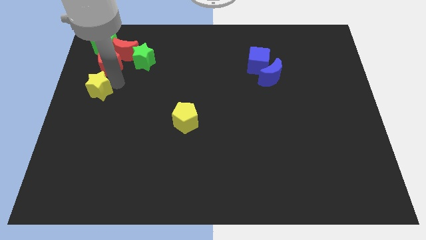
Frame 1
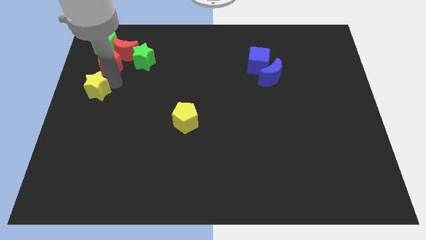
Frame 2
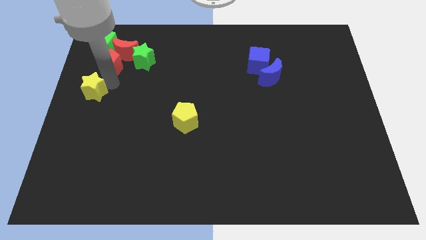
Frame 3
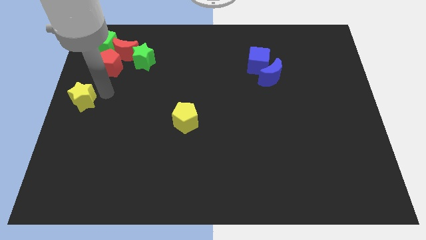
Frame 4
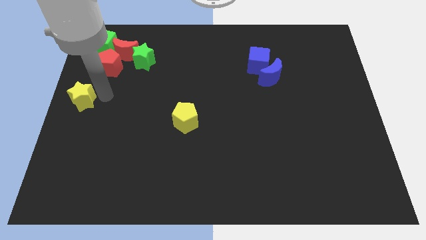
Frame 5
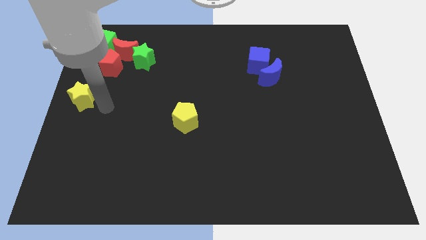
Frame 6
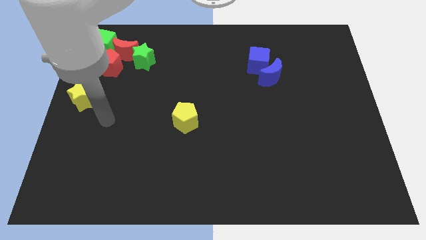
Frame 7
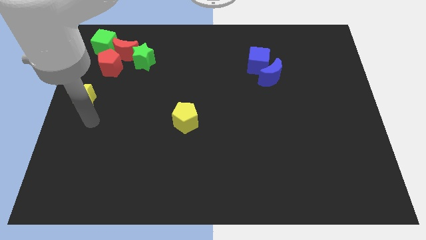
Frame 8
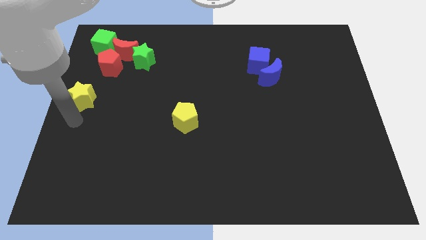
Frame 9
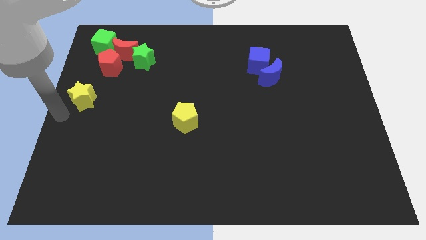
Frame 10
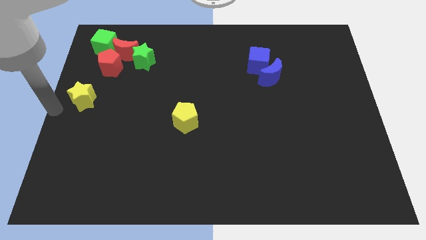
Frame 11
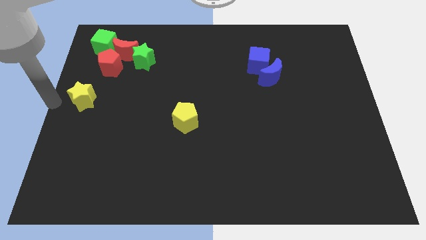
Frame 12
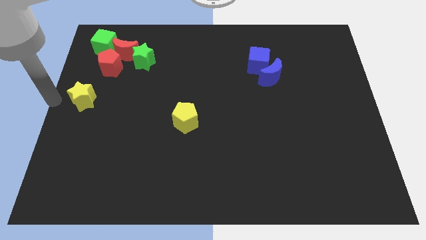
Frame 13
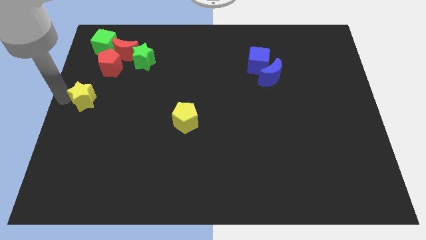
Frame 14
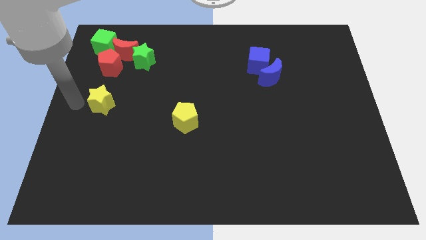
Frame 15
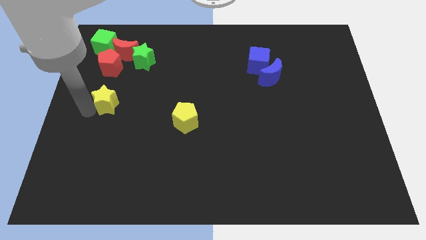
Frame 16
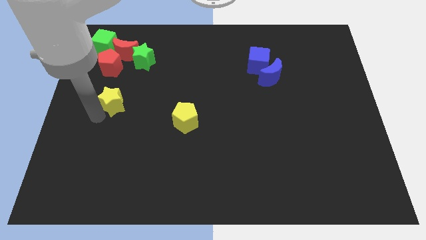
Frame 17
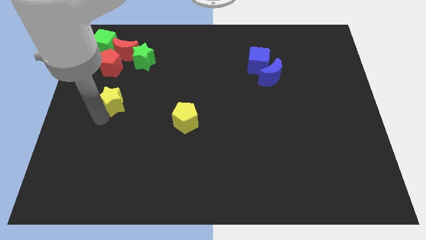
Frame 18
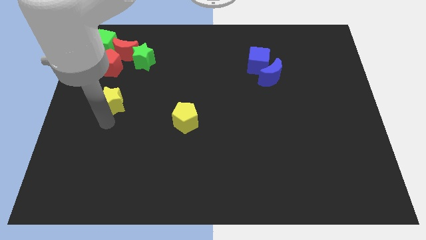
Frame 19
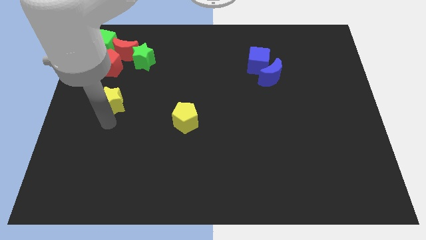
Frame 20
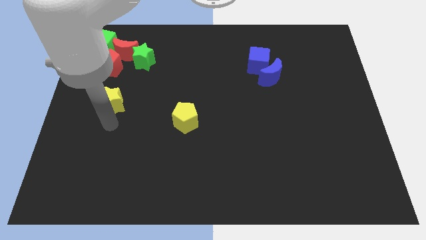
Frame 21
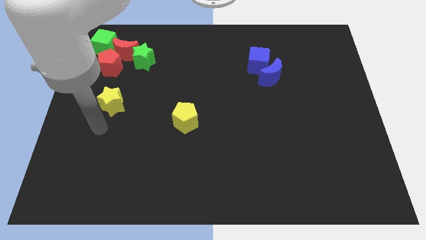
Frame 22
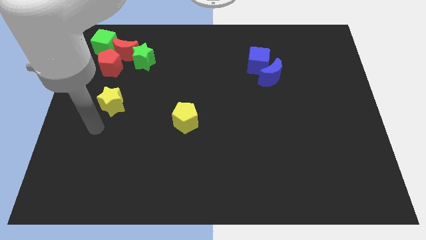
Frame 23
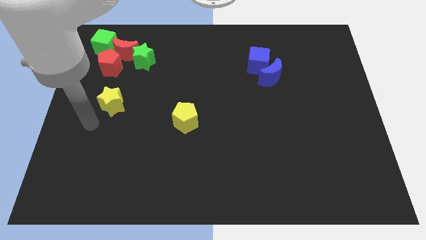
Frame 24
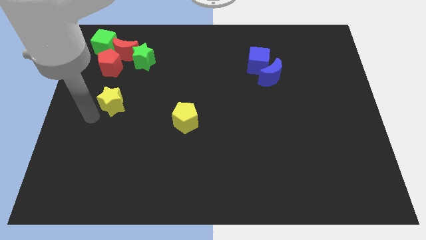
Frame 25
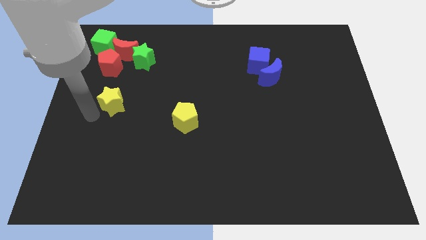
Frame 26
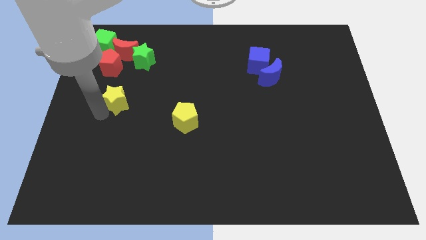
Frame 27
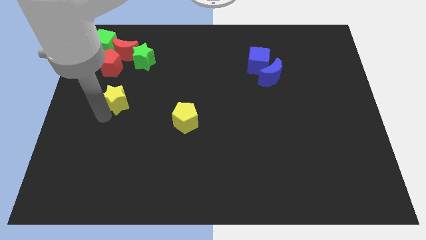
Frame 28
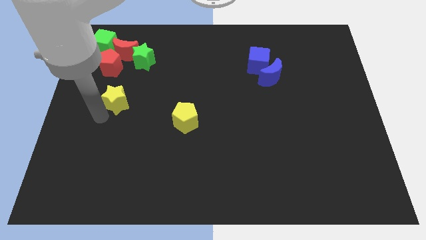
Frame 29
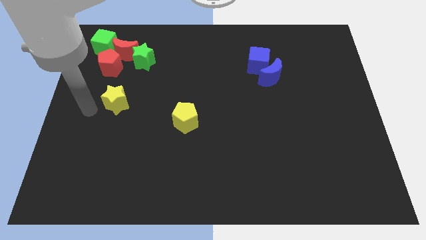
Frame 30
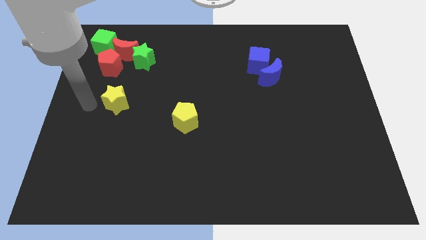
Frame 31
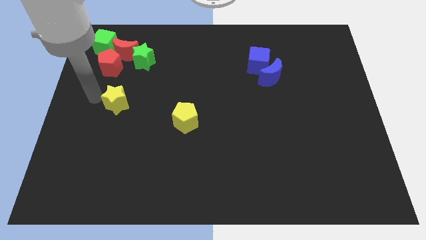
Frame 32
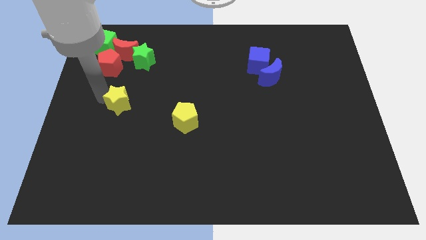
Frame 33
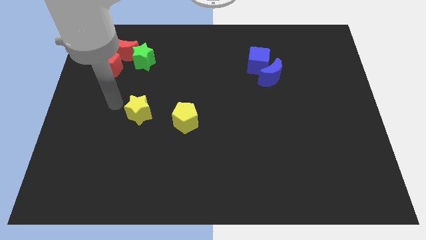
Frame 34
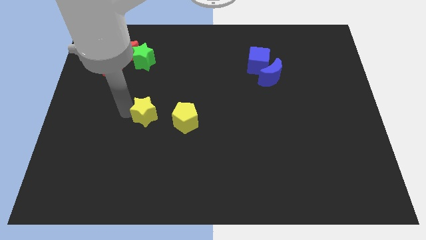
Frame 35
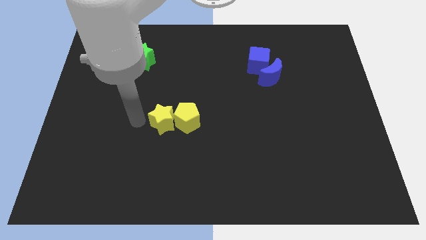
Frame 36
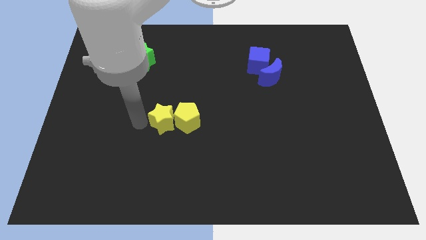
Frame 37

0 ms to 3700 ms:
drag the yellow star towards the yellow pentagon

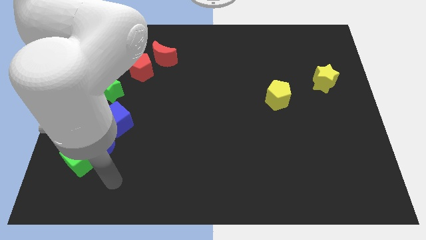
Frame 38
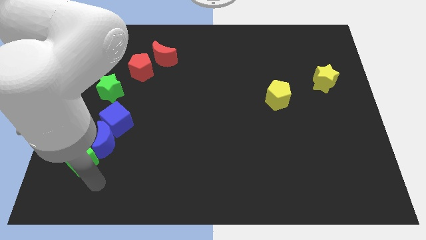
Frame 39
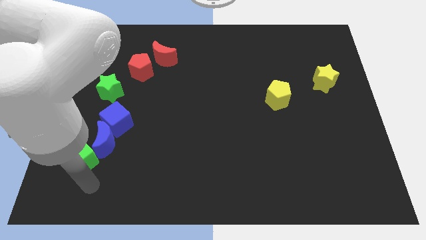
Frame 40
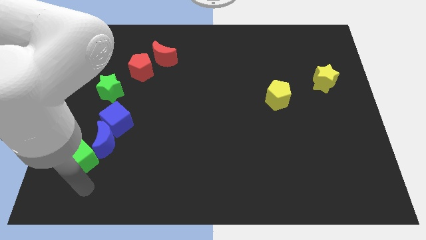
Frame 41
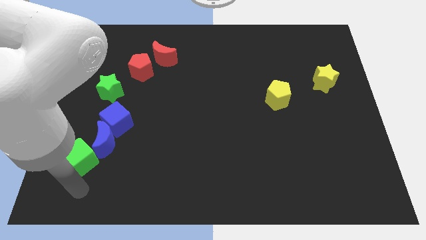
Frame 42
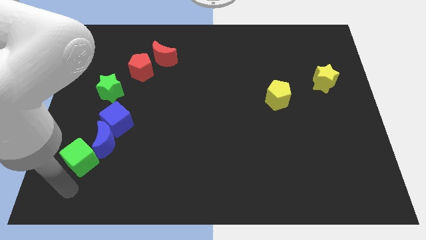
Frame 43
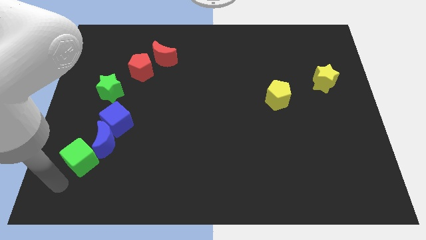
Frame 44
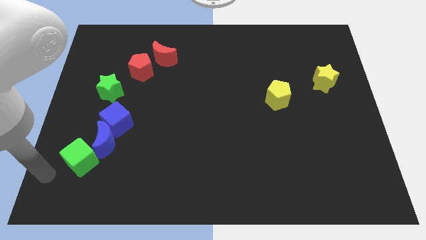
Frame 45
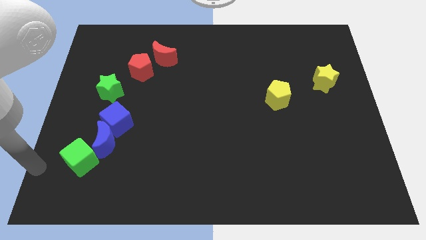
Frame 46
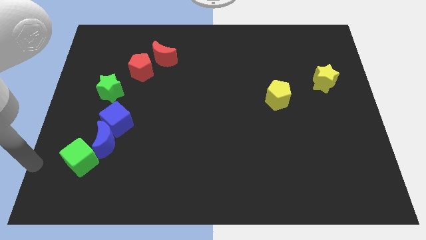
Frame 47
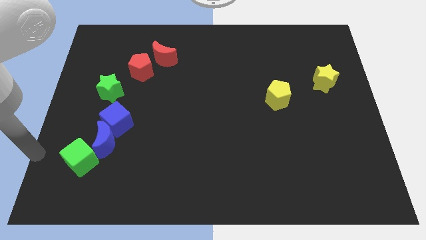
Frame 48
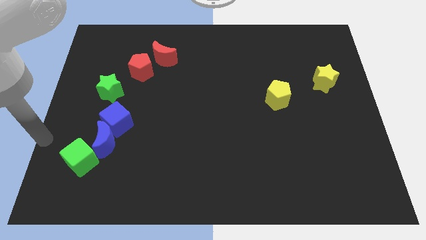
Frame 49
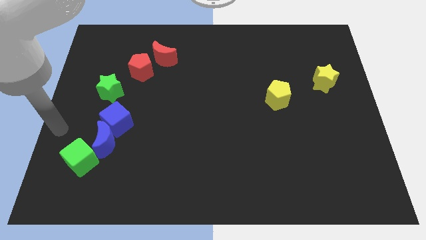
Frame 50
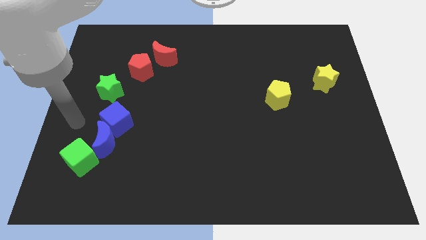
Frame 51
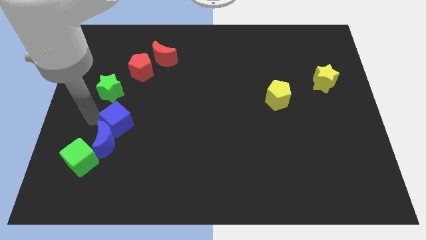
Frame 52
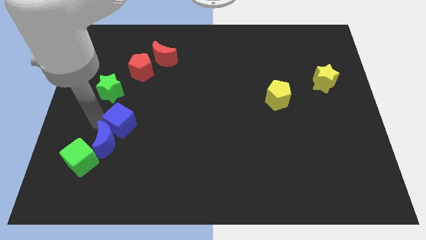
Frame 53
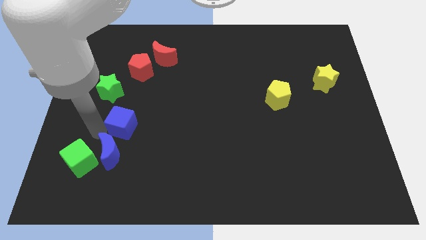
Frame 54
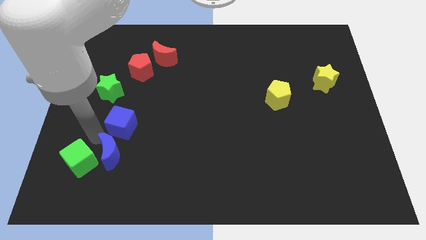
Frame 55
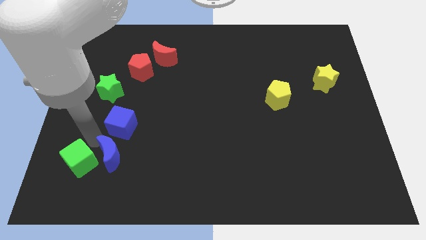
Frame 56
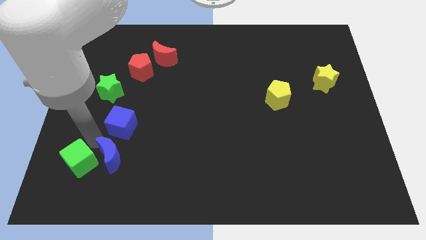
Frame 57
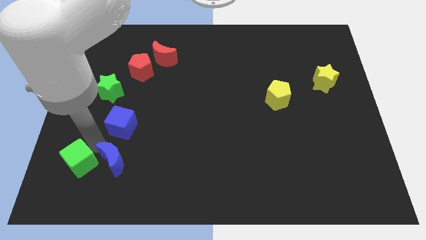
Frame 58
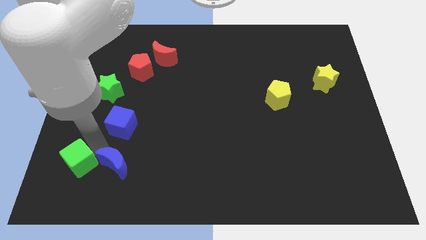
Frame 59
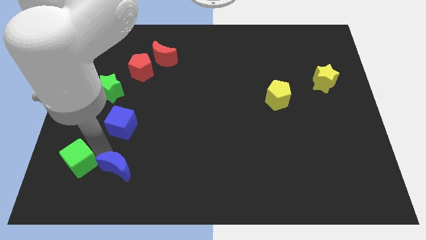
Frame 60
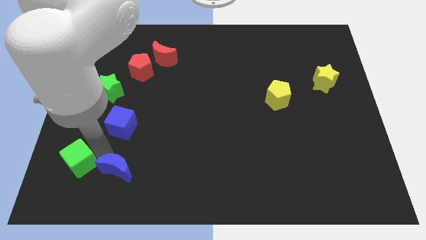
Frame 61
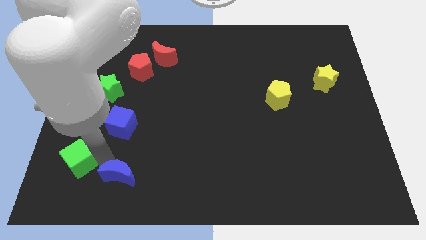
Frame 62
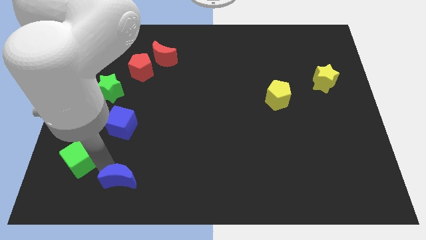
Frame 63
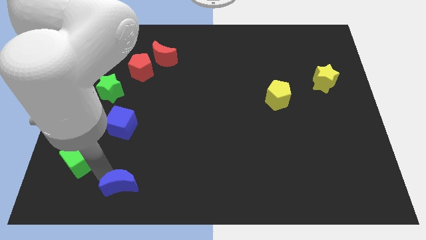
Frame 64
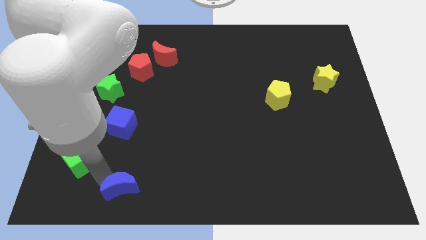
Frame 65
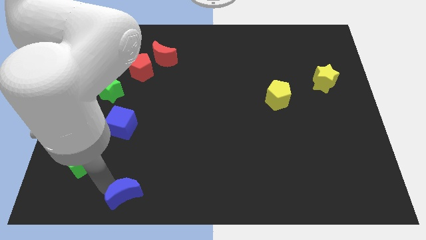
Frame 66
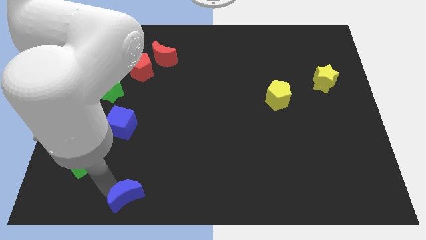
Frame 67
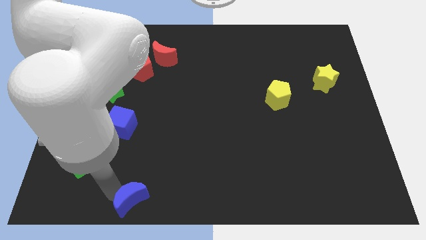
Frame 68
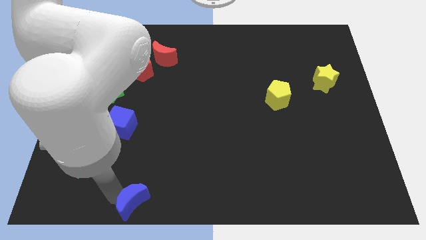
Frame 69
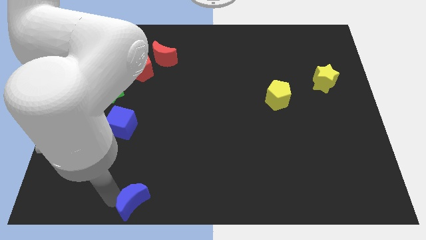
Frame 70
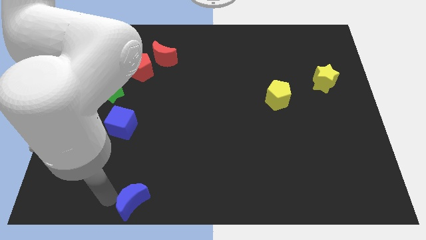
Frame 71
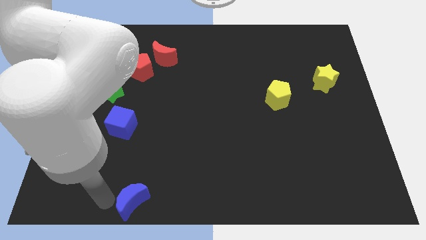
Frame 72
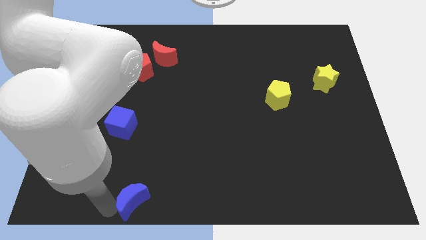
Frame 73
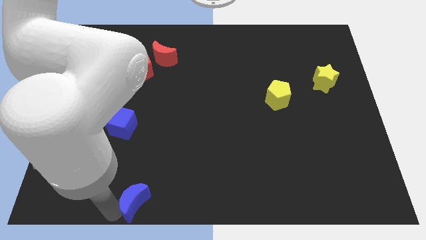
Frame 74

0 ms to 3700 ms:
separate blue moon from green cube

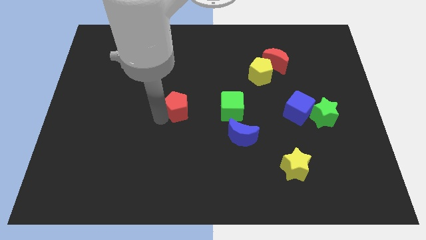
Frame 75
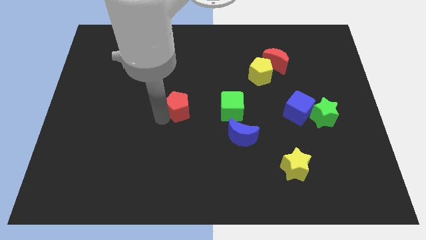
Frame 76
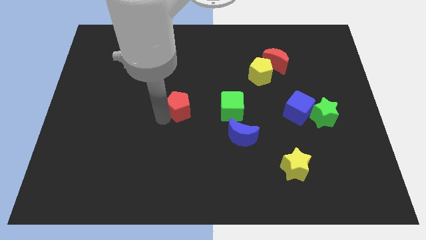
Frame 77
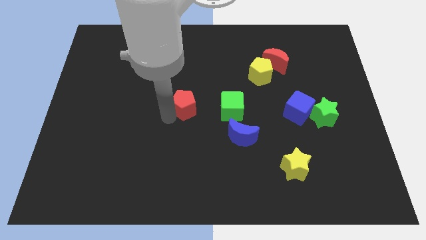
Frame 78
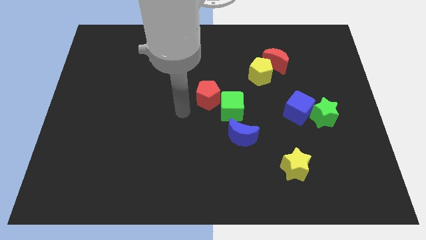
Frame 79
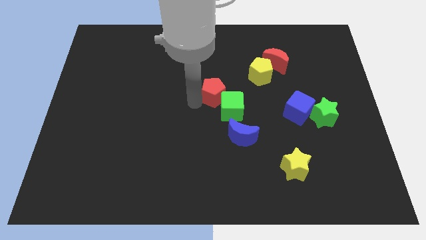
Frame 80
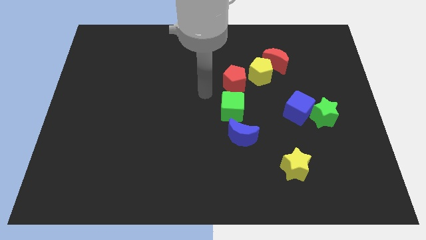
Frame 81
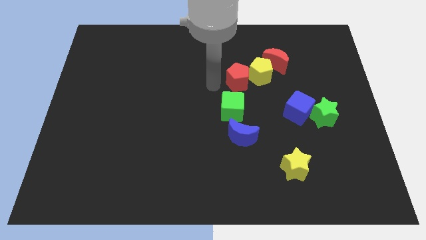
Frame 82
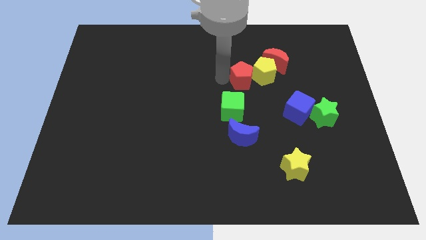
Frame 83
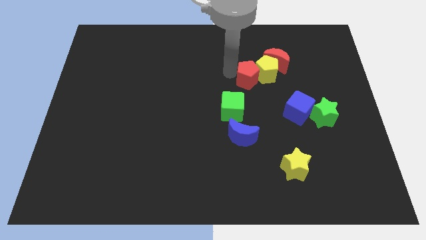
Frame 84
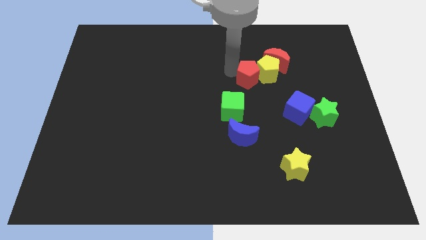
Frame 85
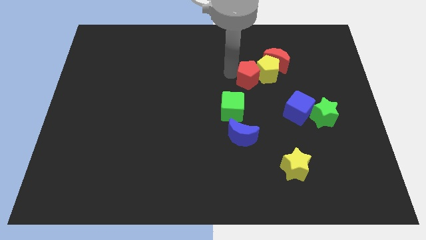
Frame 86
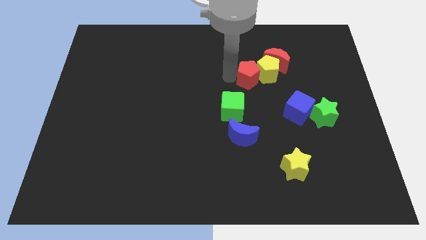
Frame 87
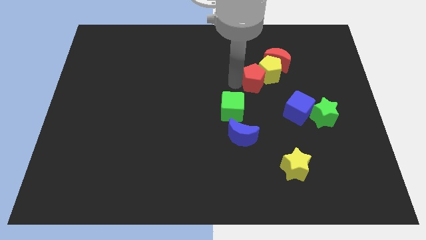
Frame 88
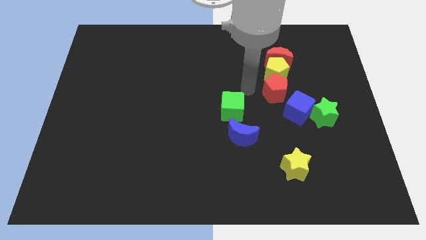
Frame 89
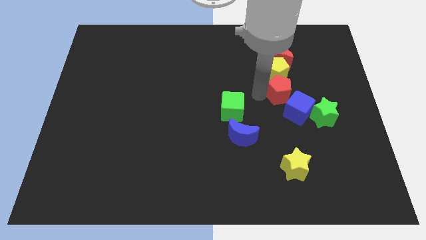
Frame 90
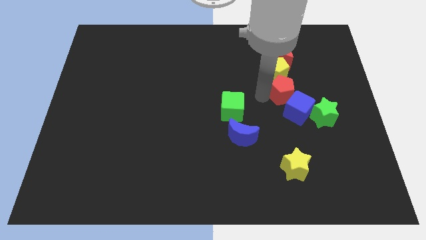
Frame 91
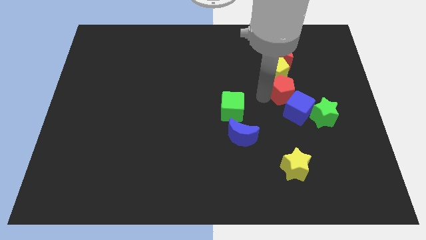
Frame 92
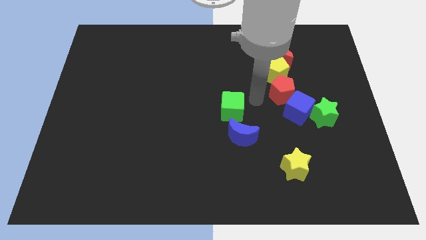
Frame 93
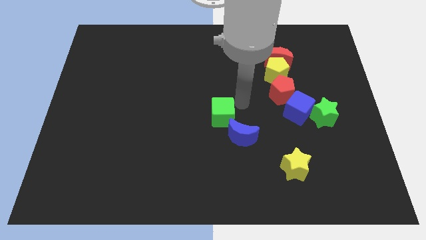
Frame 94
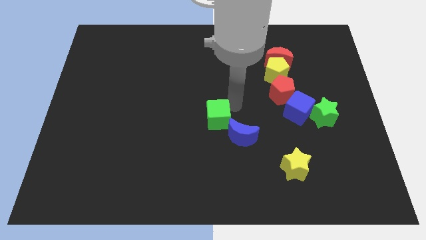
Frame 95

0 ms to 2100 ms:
place the red pentagon in between the yellow pentagon and blue cube
